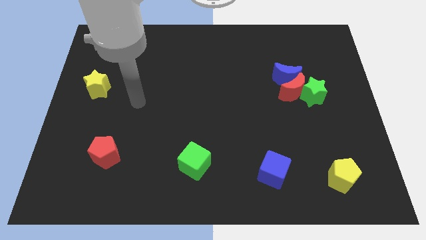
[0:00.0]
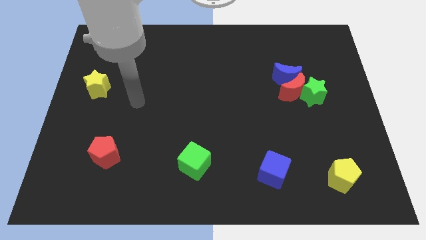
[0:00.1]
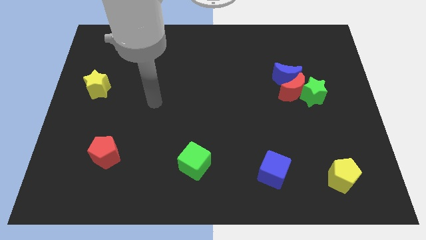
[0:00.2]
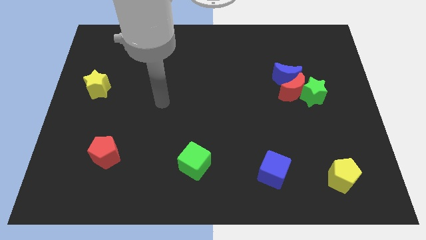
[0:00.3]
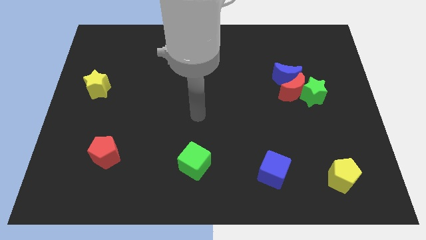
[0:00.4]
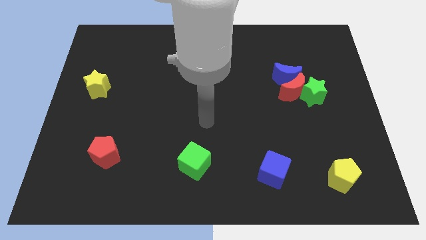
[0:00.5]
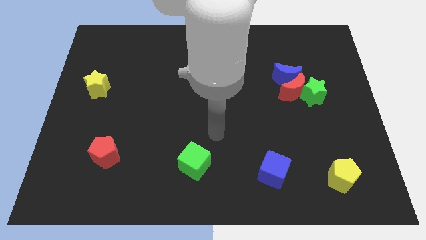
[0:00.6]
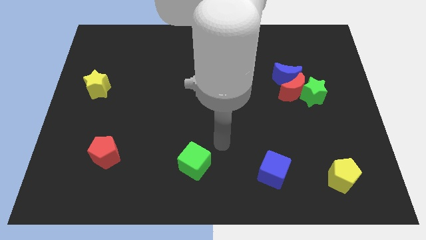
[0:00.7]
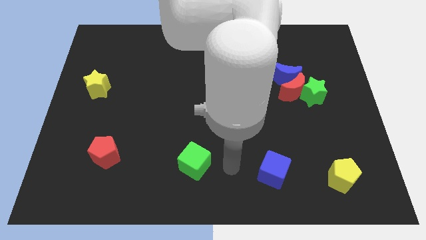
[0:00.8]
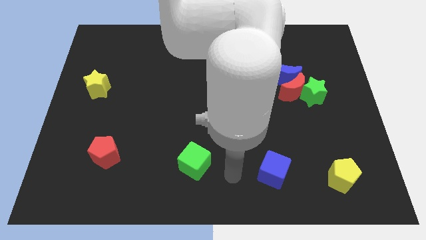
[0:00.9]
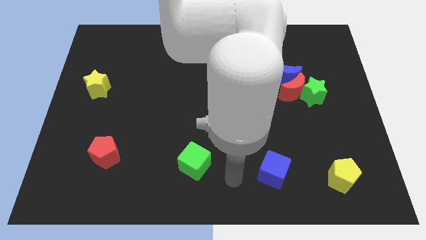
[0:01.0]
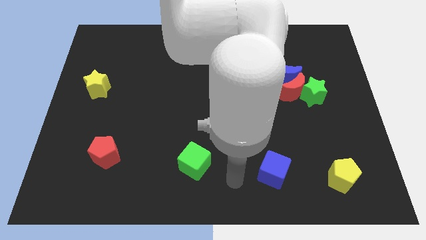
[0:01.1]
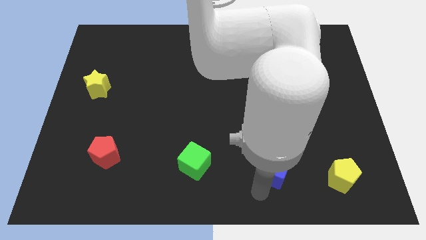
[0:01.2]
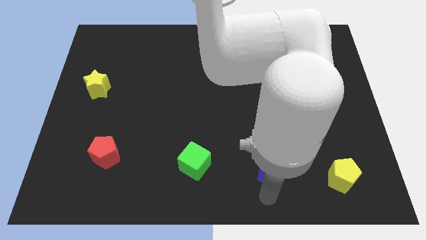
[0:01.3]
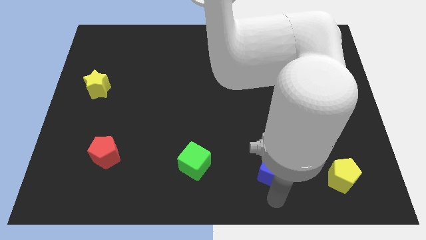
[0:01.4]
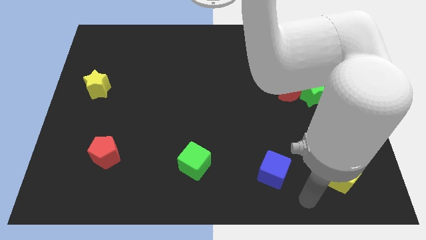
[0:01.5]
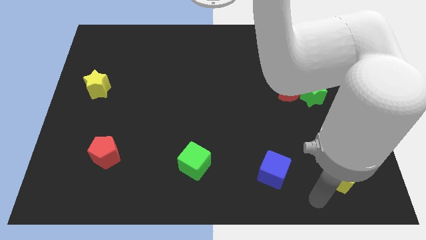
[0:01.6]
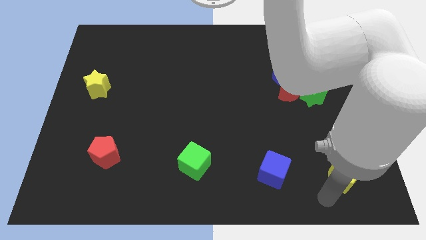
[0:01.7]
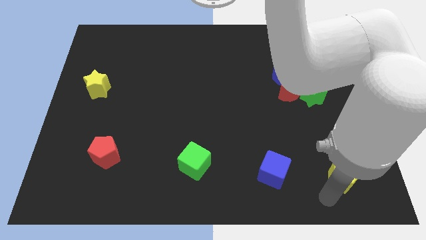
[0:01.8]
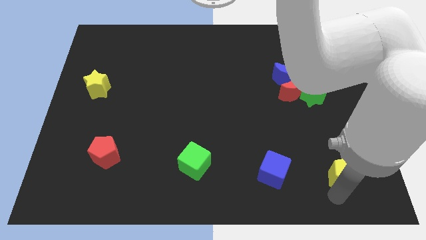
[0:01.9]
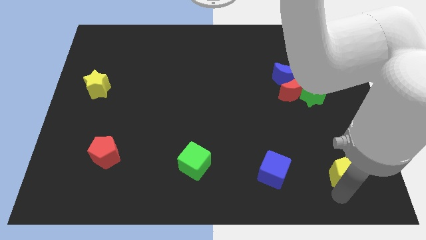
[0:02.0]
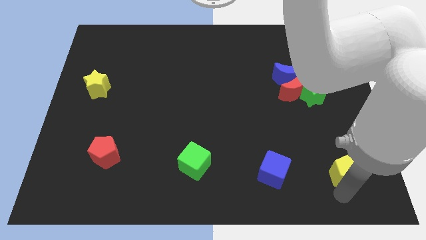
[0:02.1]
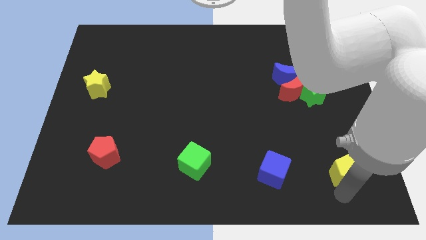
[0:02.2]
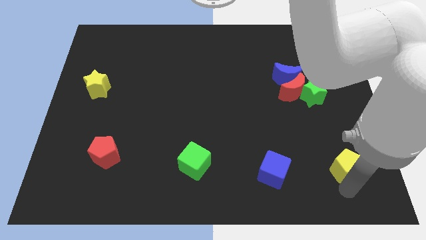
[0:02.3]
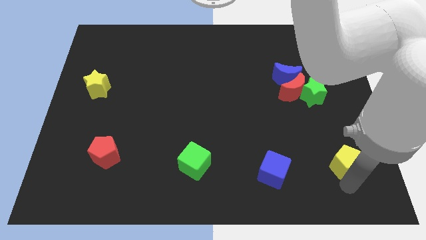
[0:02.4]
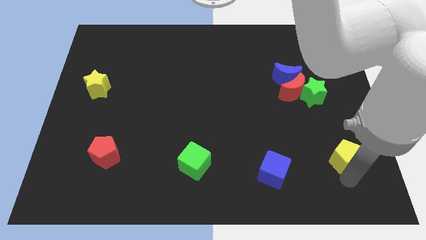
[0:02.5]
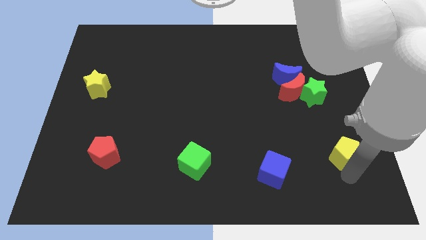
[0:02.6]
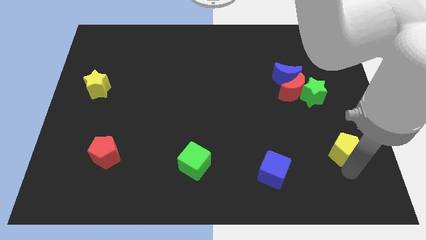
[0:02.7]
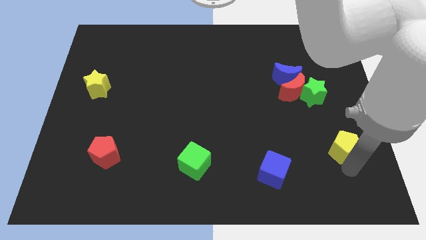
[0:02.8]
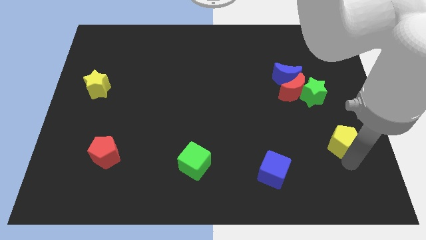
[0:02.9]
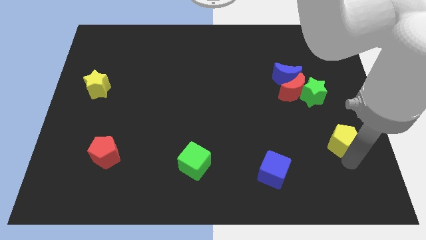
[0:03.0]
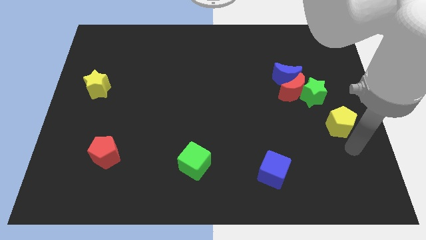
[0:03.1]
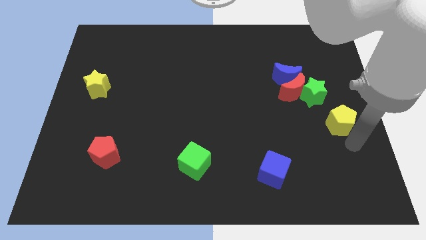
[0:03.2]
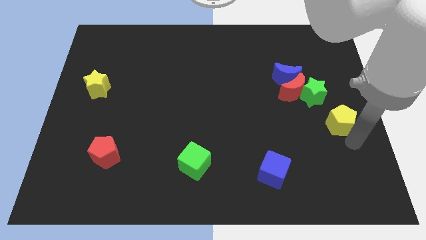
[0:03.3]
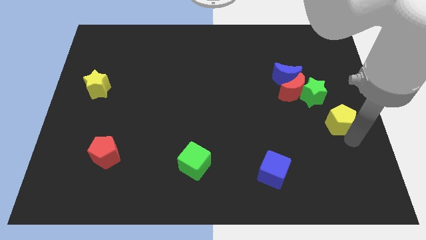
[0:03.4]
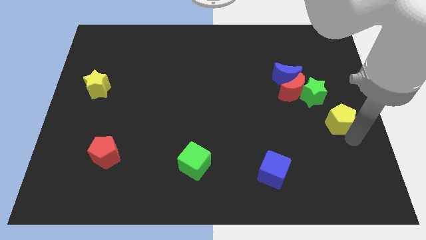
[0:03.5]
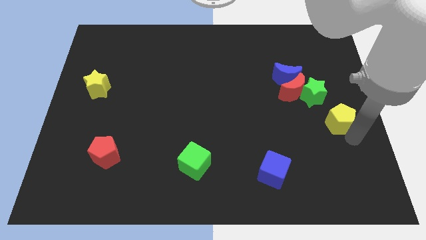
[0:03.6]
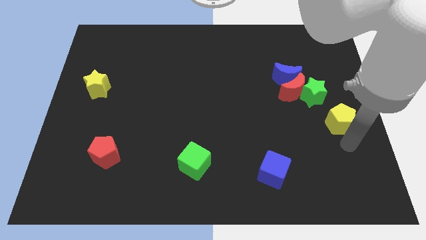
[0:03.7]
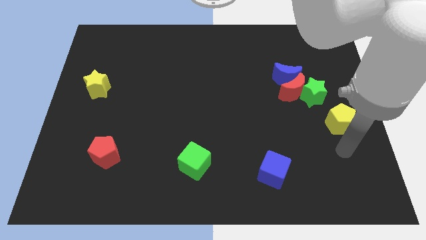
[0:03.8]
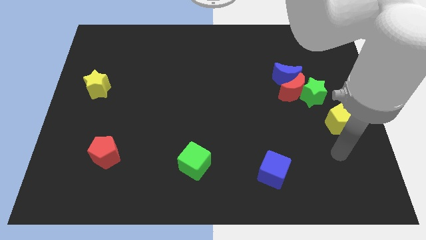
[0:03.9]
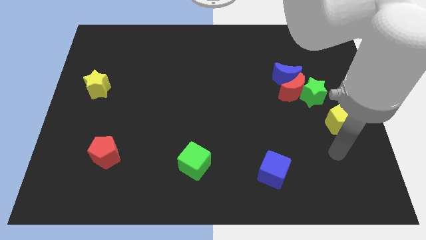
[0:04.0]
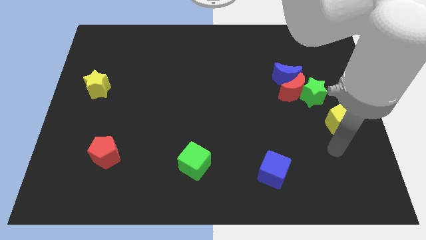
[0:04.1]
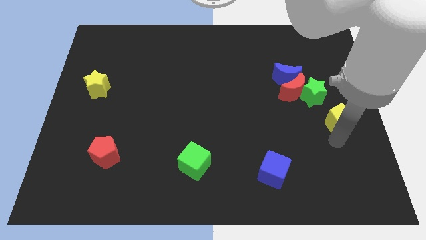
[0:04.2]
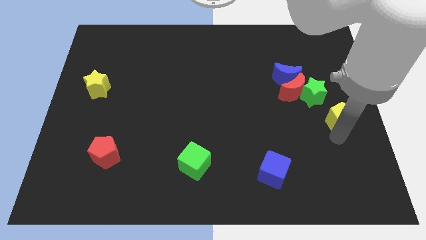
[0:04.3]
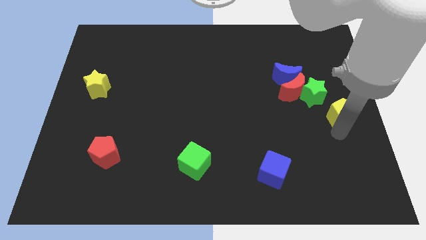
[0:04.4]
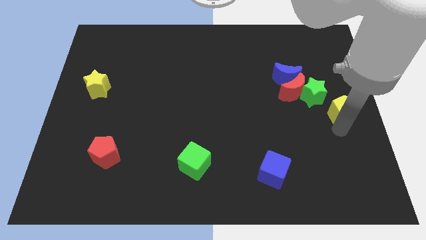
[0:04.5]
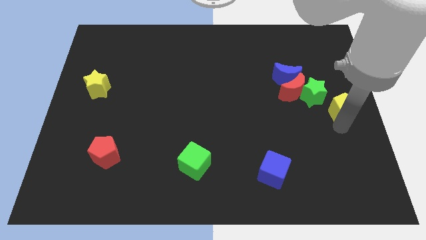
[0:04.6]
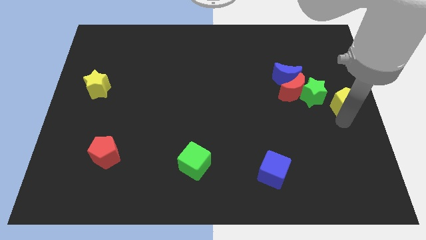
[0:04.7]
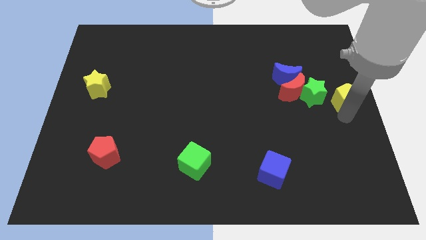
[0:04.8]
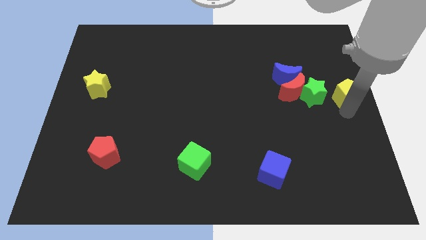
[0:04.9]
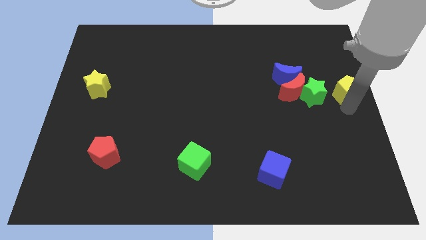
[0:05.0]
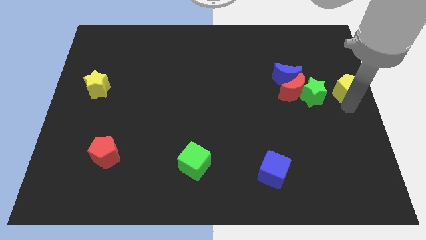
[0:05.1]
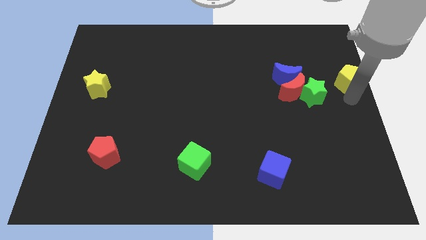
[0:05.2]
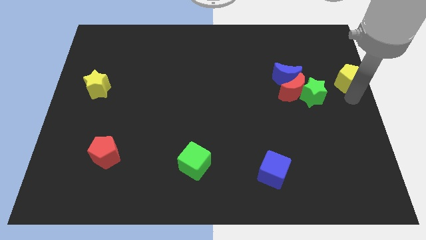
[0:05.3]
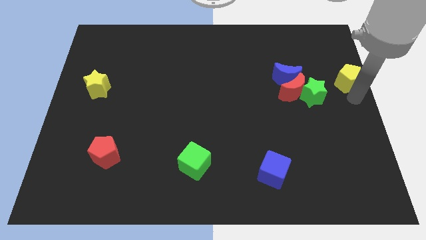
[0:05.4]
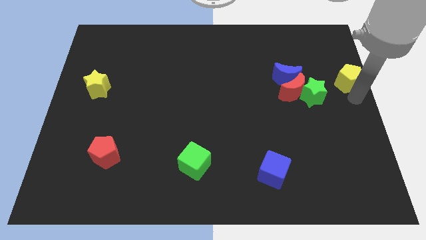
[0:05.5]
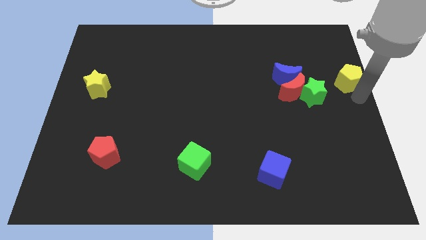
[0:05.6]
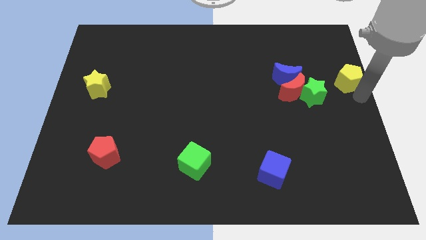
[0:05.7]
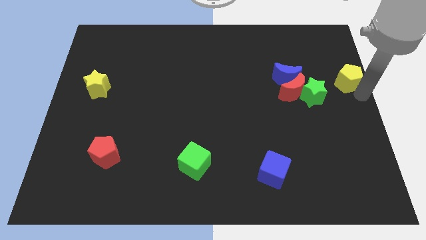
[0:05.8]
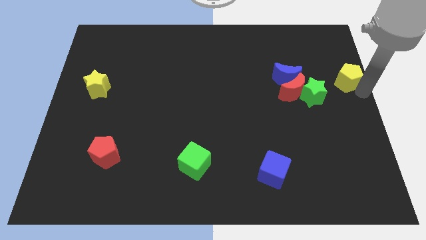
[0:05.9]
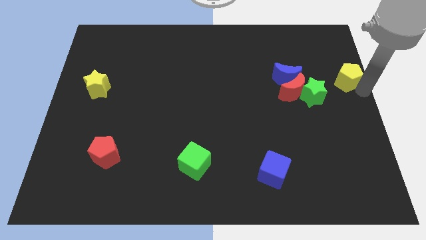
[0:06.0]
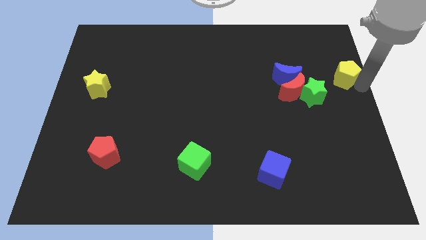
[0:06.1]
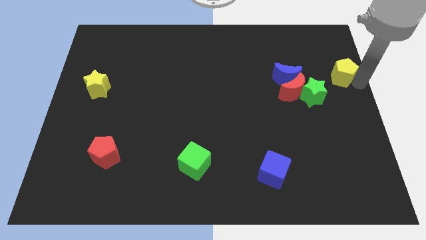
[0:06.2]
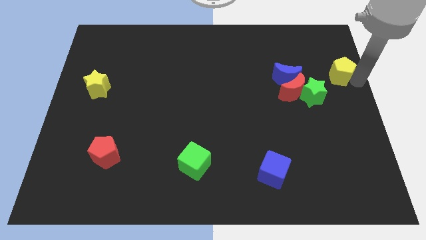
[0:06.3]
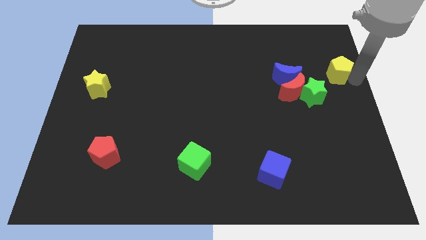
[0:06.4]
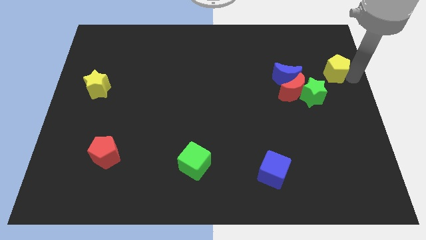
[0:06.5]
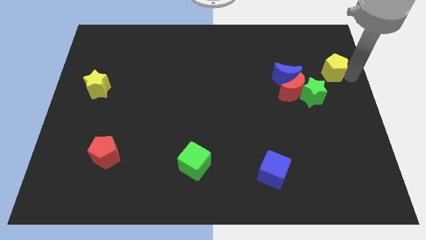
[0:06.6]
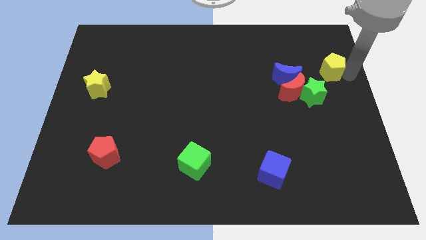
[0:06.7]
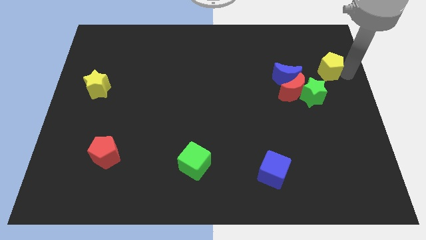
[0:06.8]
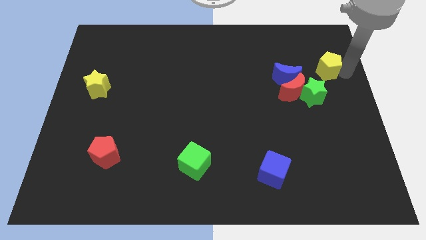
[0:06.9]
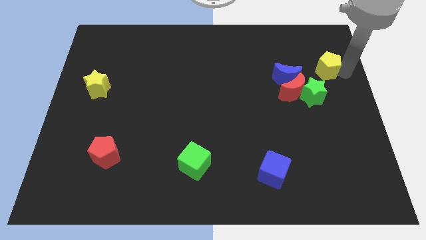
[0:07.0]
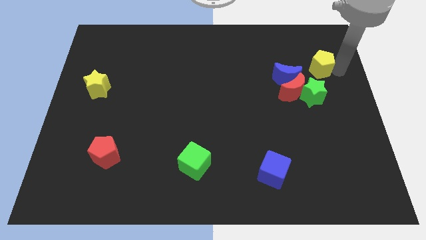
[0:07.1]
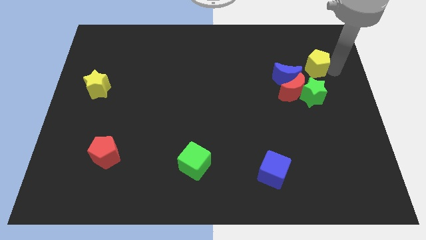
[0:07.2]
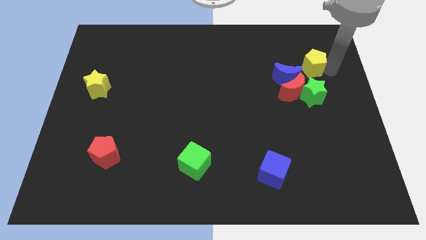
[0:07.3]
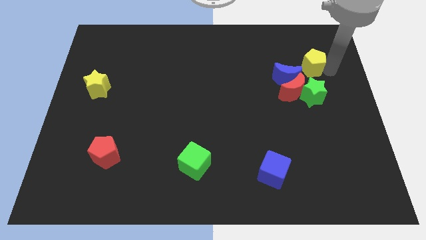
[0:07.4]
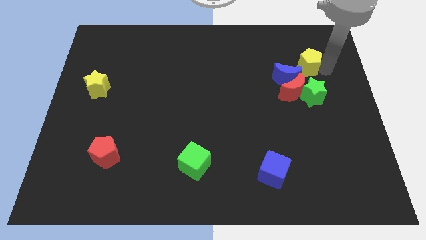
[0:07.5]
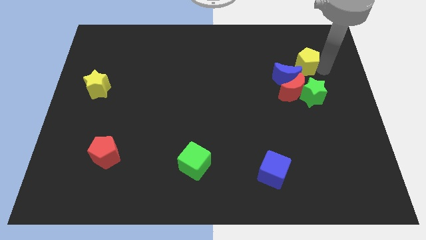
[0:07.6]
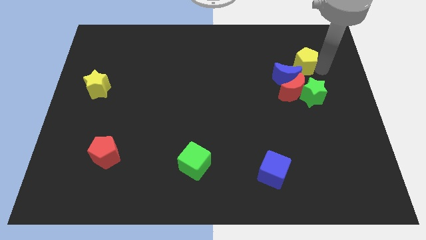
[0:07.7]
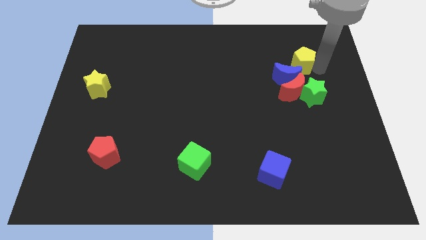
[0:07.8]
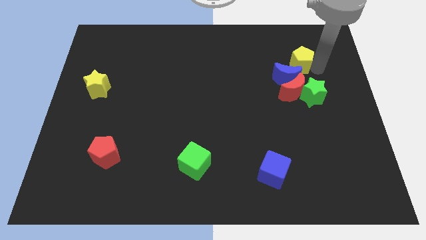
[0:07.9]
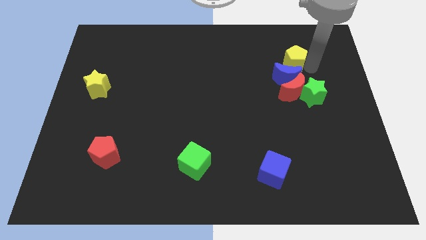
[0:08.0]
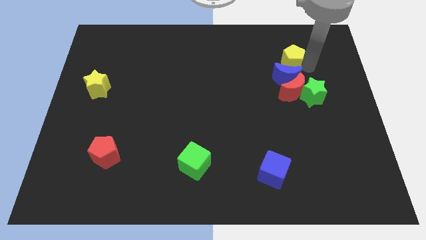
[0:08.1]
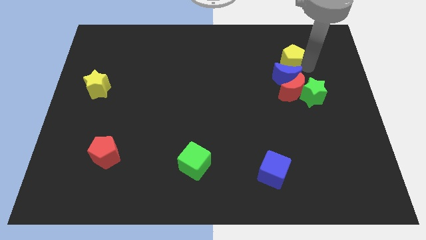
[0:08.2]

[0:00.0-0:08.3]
slide the yellow pentagon next to the blue moon

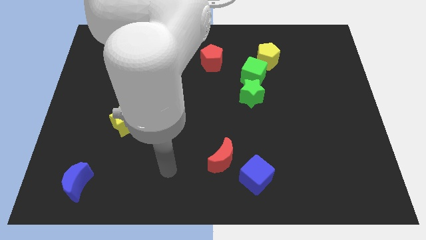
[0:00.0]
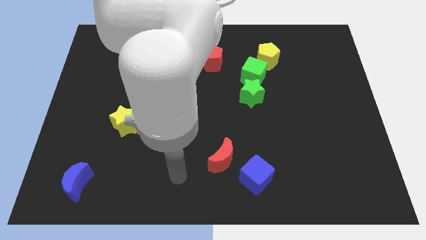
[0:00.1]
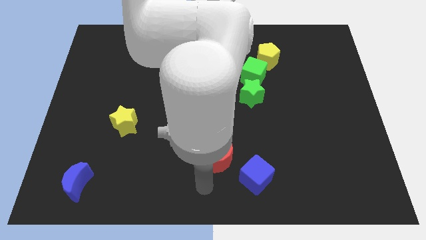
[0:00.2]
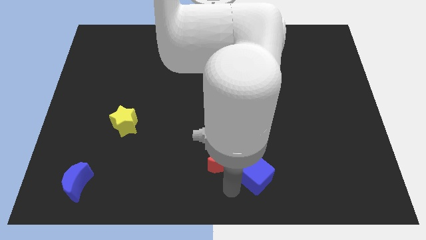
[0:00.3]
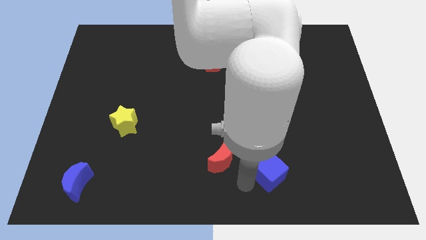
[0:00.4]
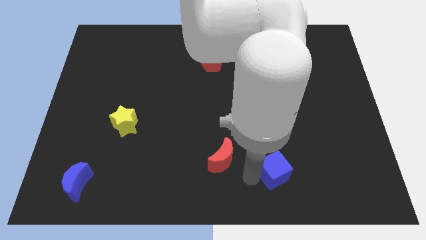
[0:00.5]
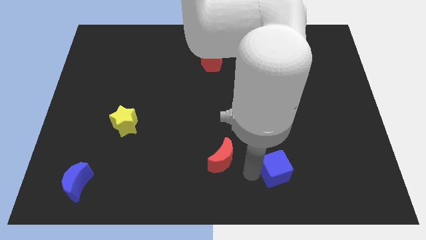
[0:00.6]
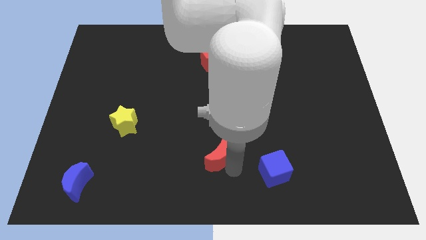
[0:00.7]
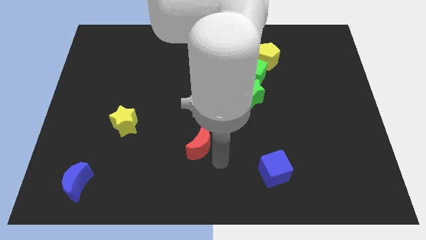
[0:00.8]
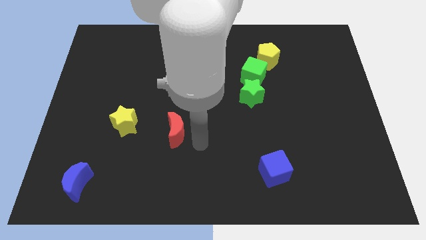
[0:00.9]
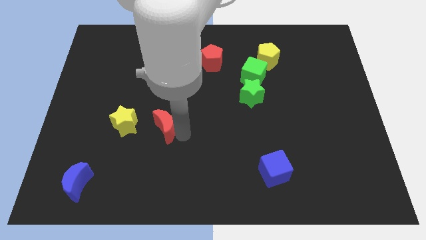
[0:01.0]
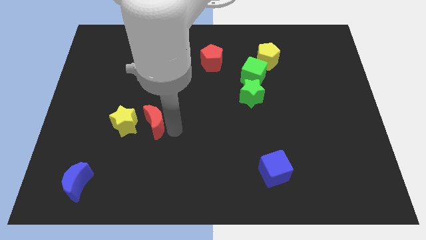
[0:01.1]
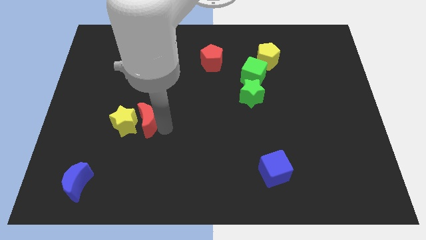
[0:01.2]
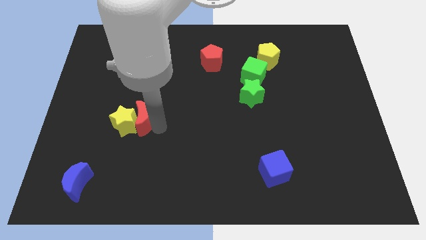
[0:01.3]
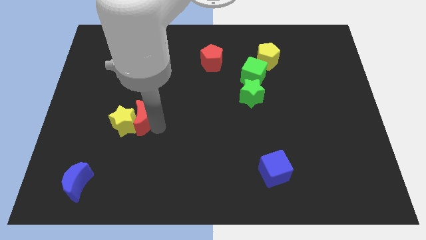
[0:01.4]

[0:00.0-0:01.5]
move the red moon close to the yellow star
